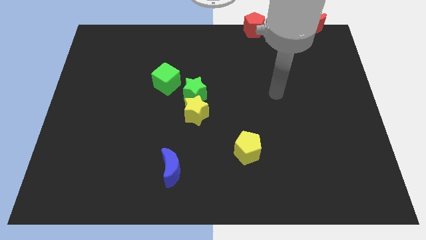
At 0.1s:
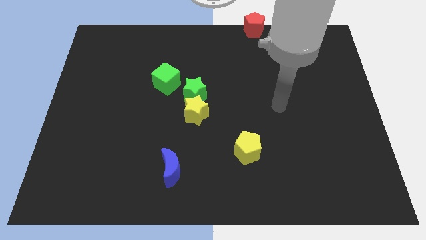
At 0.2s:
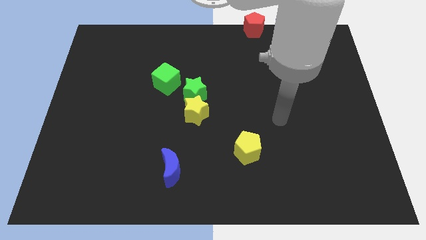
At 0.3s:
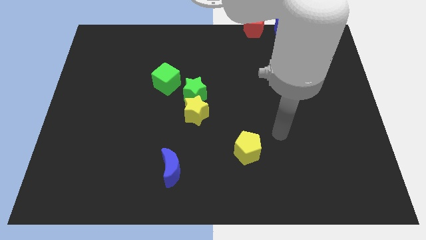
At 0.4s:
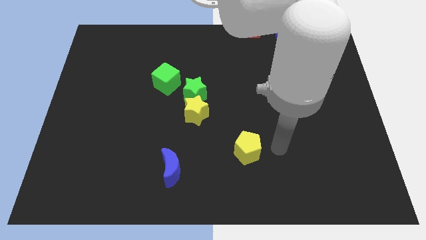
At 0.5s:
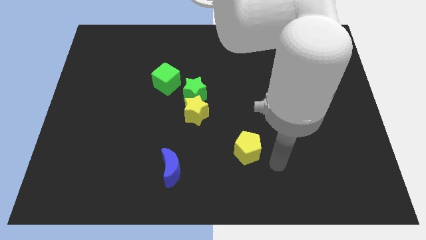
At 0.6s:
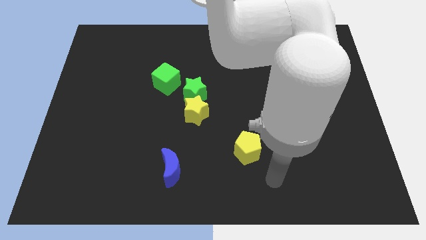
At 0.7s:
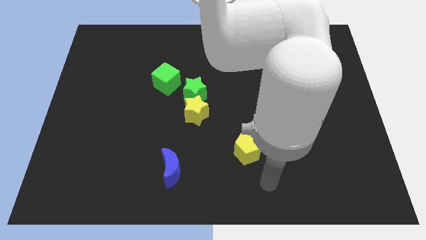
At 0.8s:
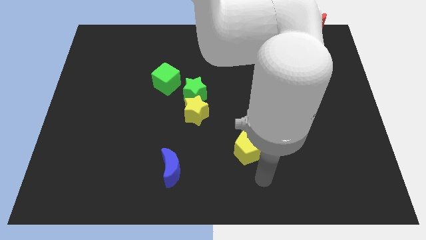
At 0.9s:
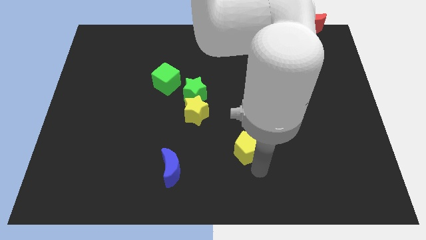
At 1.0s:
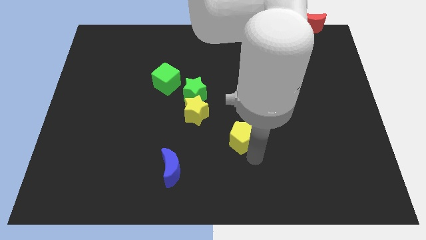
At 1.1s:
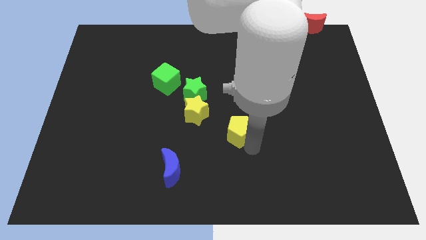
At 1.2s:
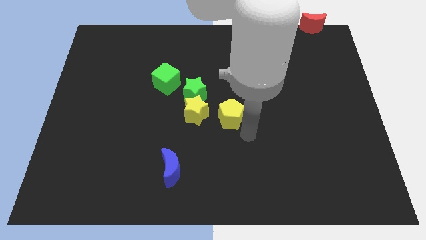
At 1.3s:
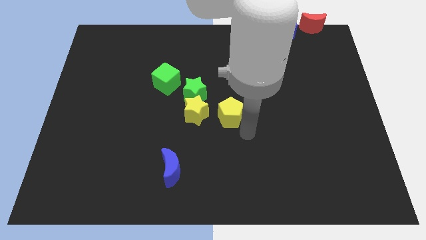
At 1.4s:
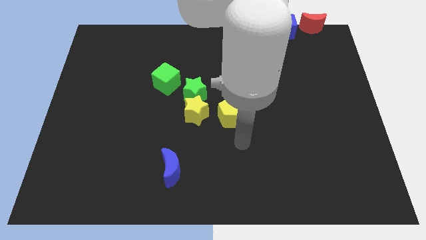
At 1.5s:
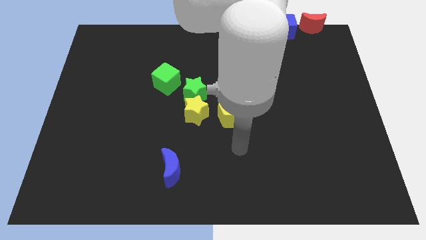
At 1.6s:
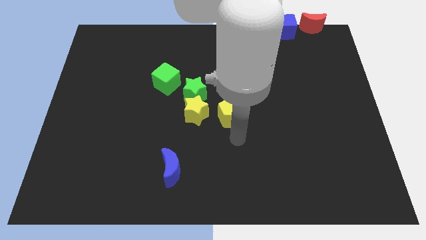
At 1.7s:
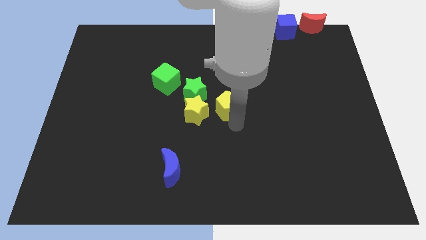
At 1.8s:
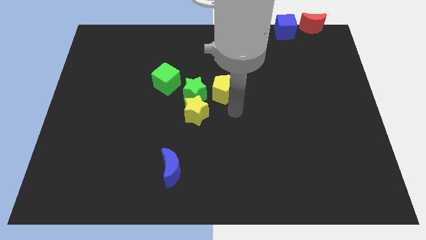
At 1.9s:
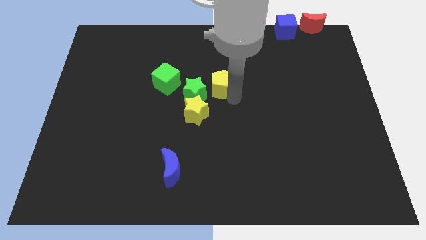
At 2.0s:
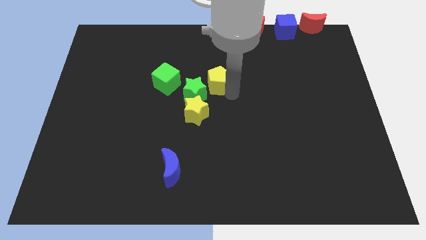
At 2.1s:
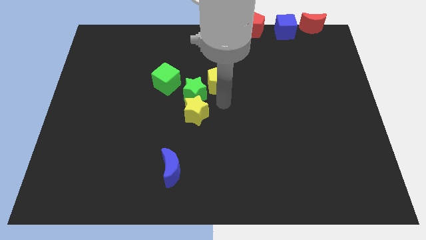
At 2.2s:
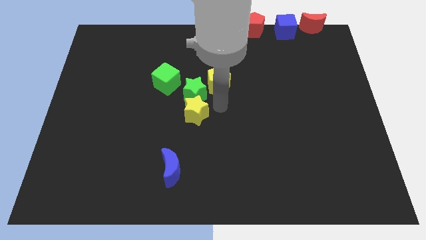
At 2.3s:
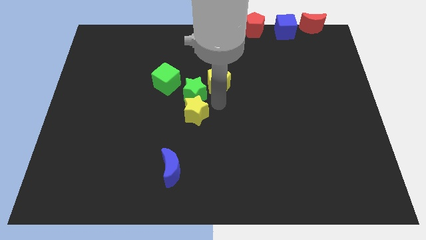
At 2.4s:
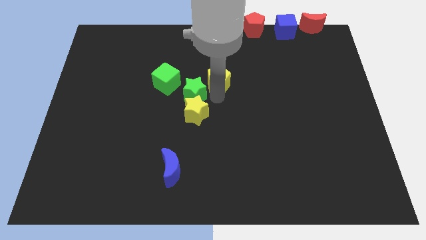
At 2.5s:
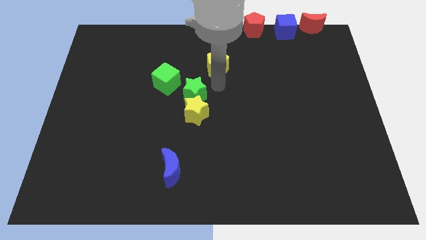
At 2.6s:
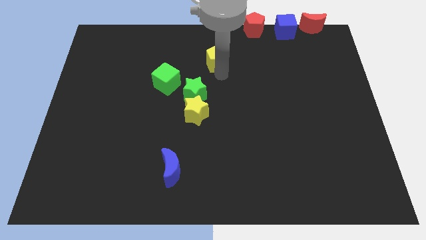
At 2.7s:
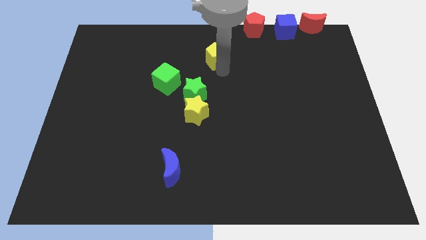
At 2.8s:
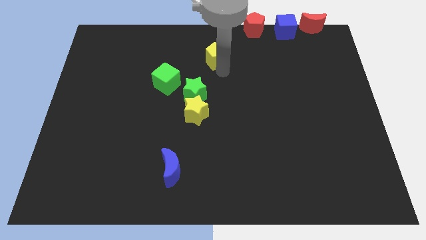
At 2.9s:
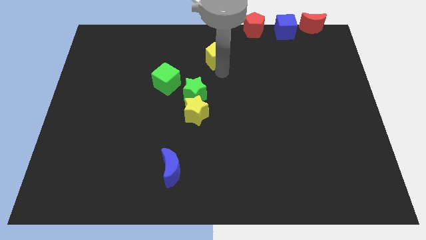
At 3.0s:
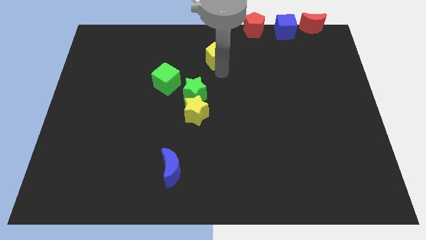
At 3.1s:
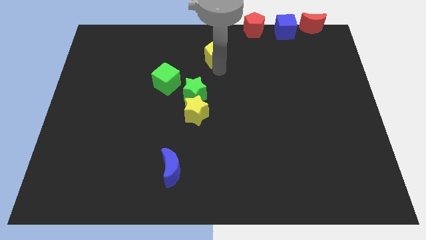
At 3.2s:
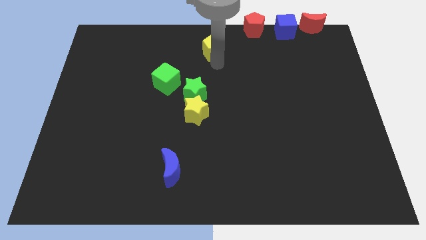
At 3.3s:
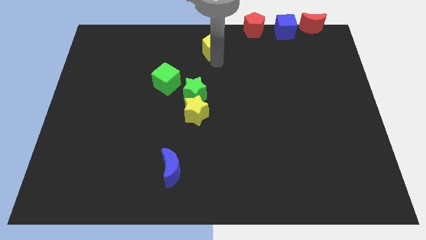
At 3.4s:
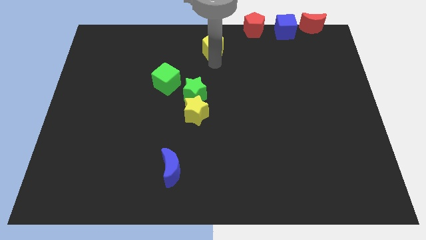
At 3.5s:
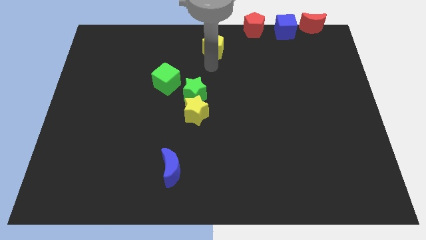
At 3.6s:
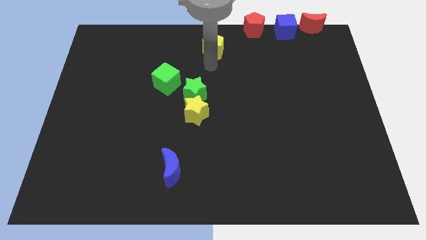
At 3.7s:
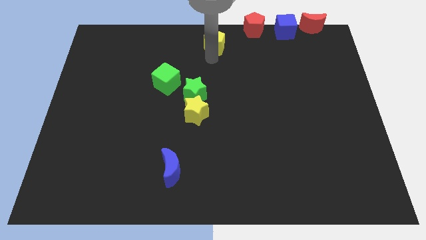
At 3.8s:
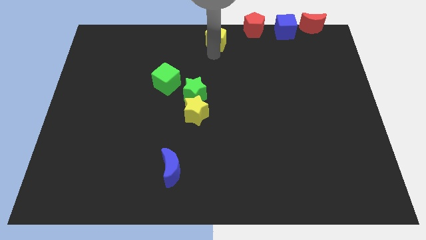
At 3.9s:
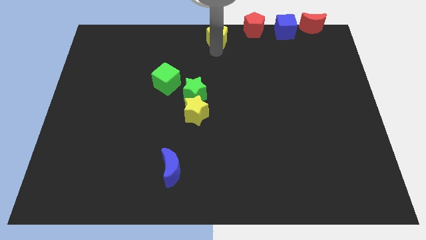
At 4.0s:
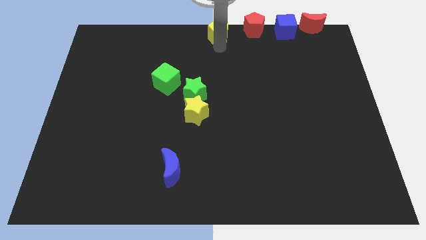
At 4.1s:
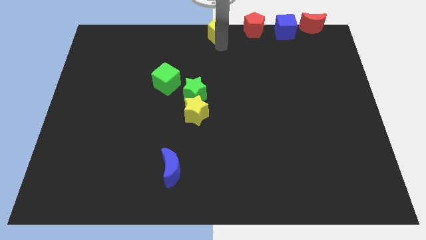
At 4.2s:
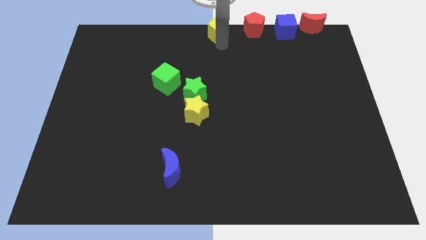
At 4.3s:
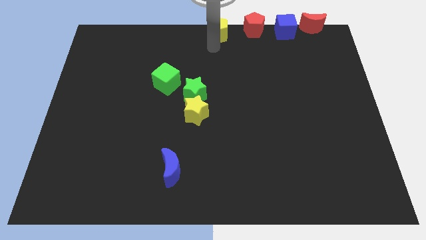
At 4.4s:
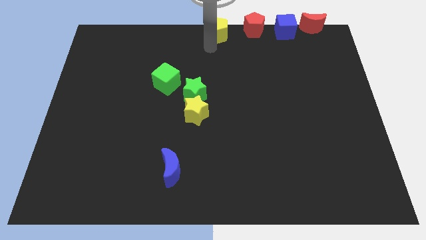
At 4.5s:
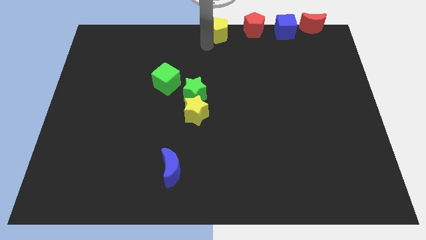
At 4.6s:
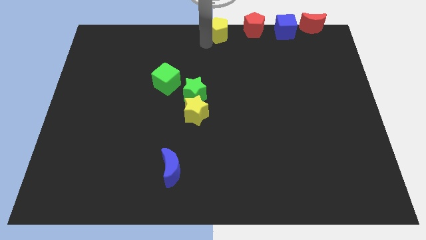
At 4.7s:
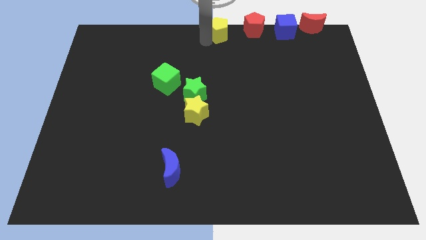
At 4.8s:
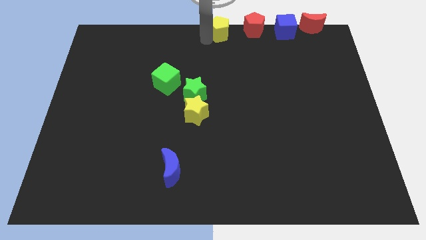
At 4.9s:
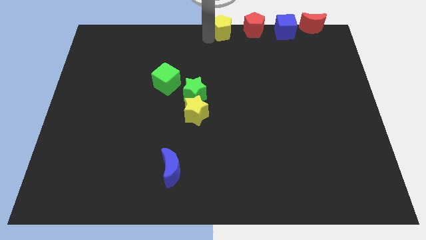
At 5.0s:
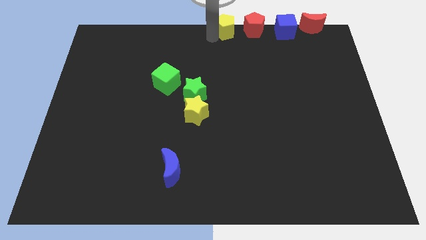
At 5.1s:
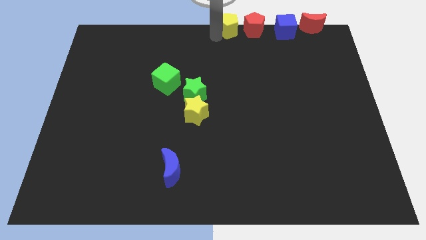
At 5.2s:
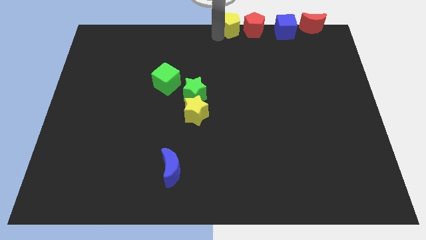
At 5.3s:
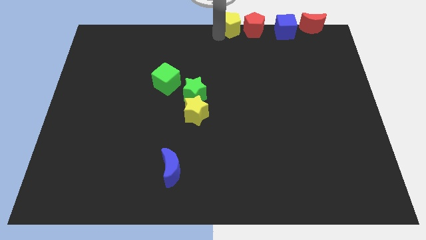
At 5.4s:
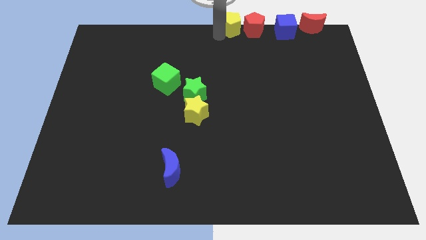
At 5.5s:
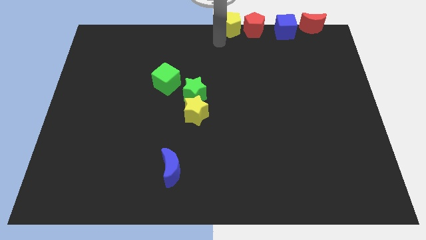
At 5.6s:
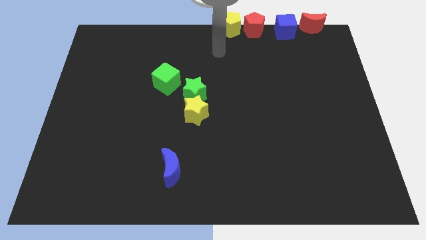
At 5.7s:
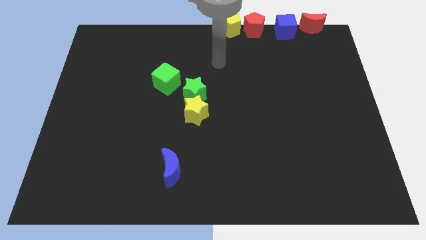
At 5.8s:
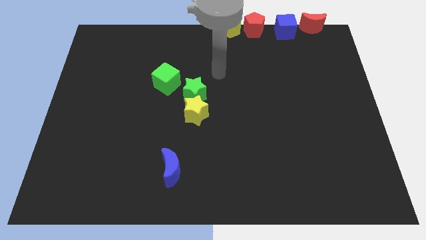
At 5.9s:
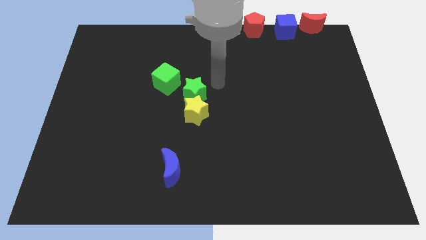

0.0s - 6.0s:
place the yellow pentagon to the top center of the board

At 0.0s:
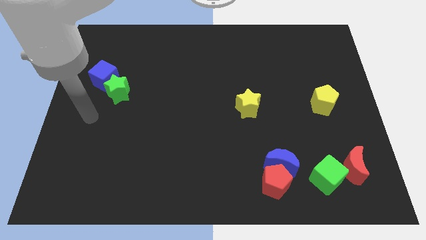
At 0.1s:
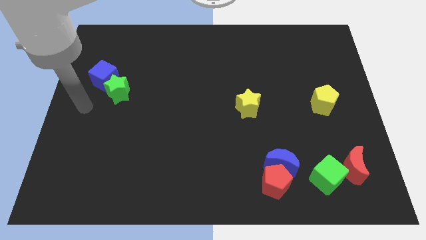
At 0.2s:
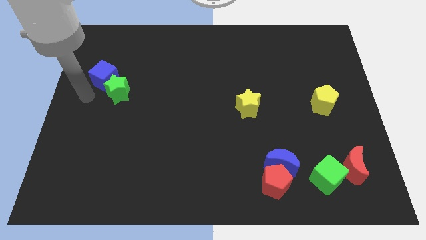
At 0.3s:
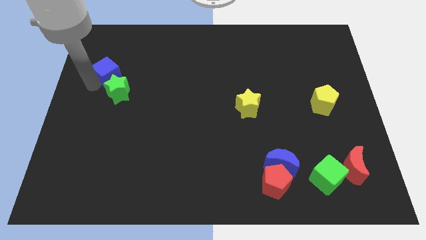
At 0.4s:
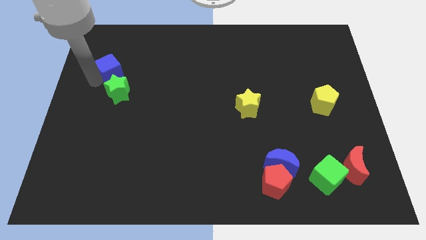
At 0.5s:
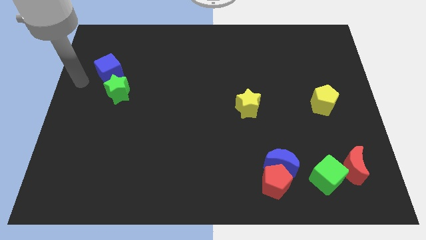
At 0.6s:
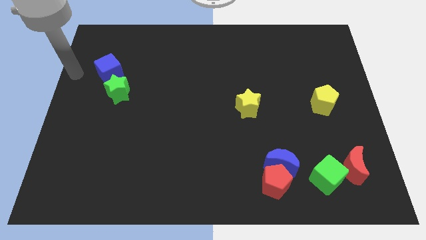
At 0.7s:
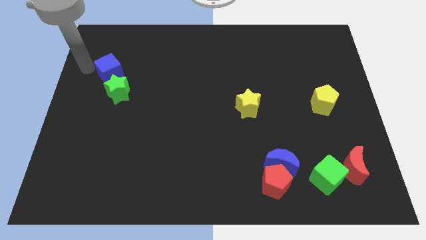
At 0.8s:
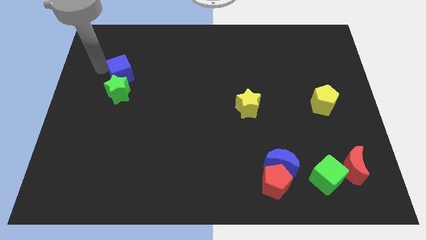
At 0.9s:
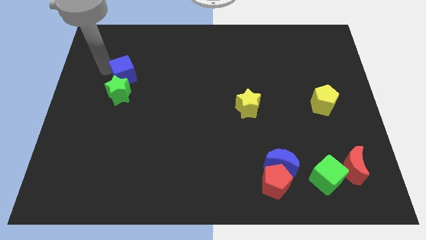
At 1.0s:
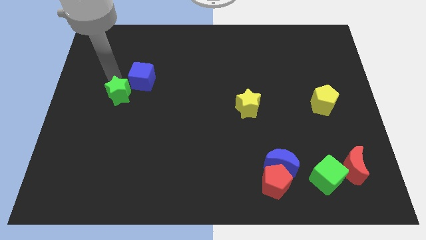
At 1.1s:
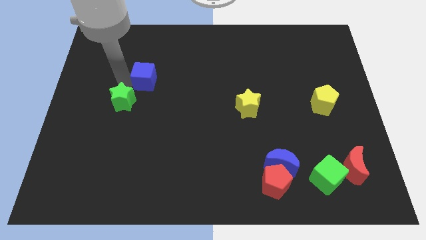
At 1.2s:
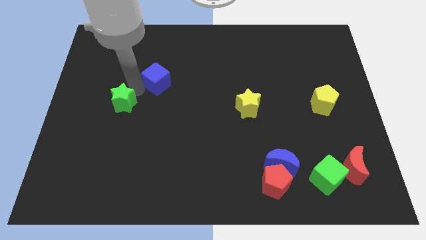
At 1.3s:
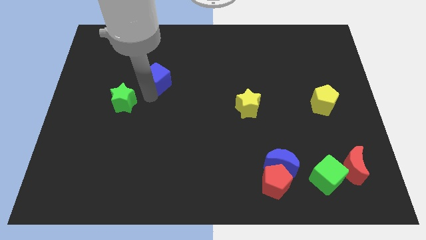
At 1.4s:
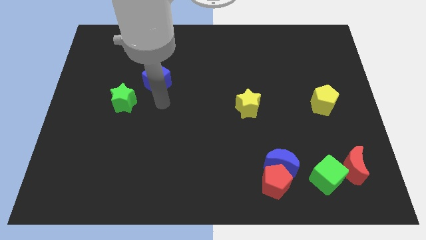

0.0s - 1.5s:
separate blue cube from the green star

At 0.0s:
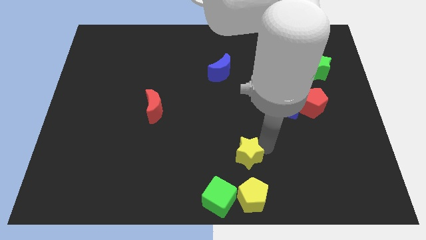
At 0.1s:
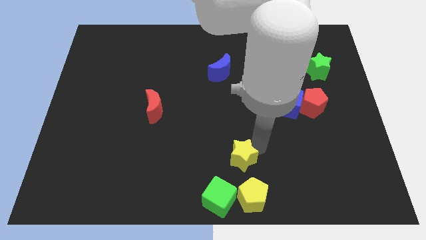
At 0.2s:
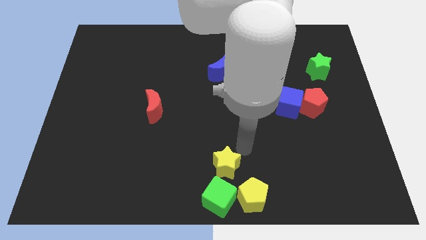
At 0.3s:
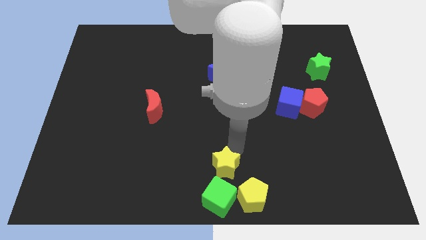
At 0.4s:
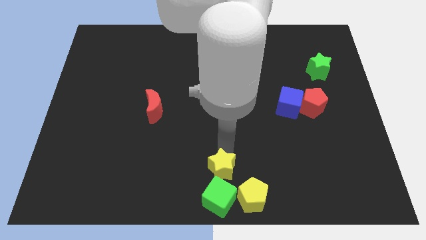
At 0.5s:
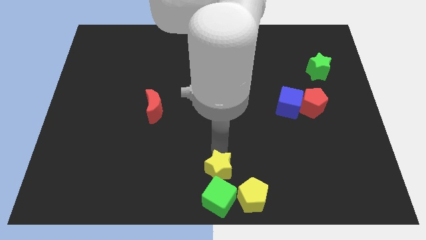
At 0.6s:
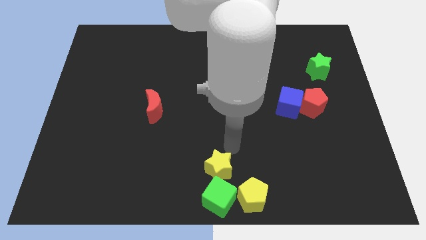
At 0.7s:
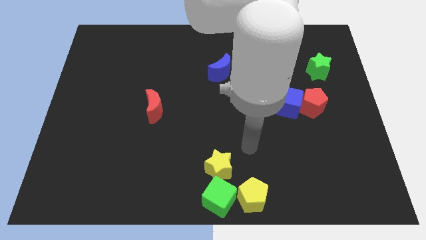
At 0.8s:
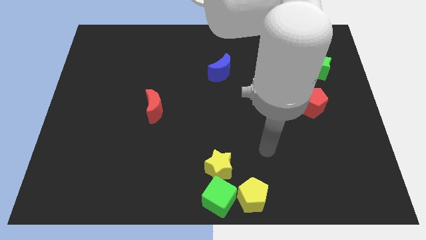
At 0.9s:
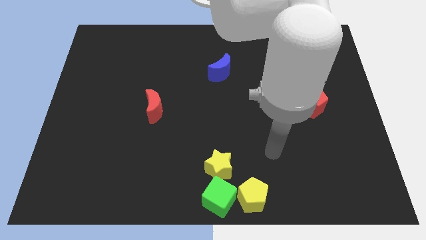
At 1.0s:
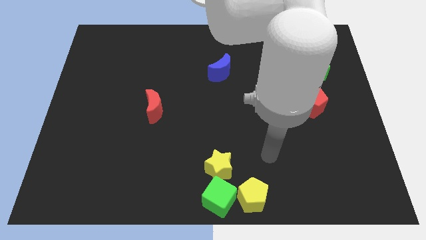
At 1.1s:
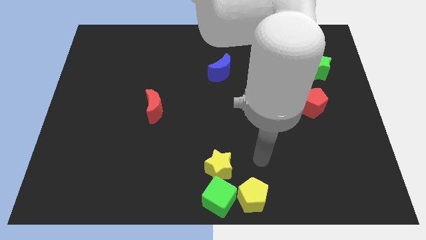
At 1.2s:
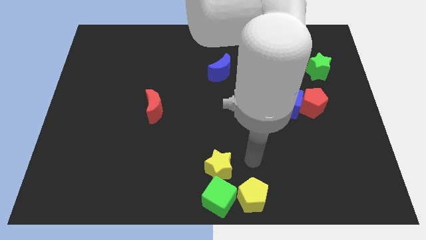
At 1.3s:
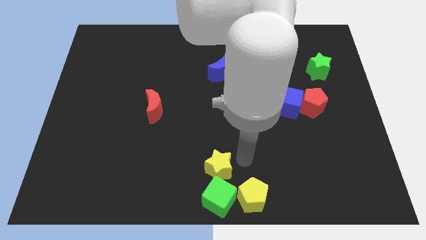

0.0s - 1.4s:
move yellow star above green cube
